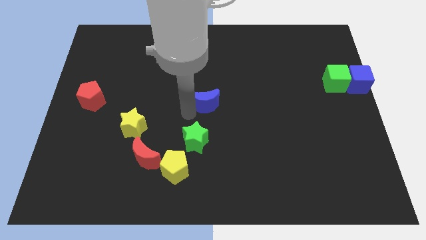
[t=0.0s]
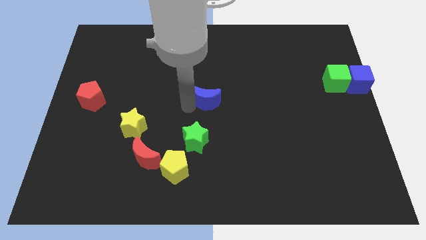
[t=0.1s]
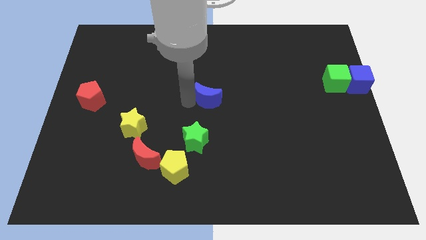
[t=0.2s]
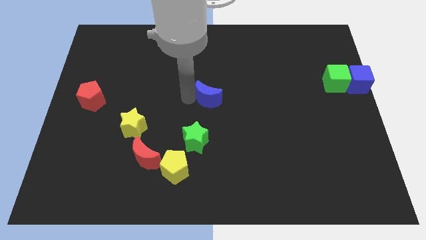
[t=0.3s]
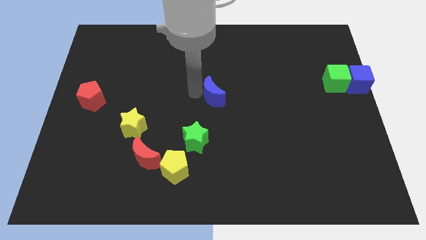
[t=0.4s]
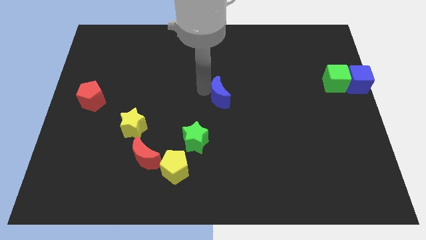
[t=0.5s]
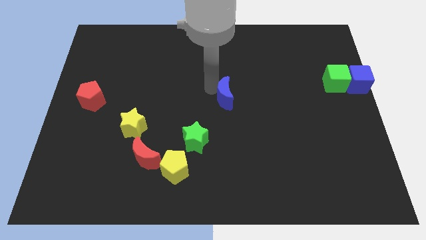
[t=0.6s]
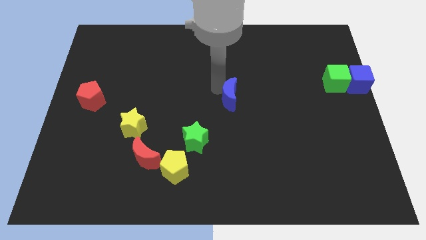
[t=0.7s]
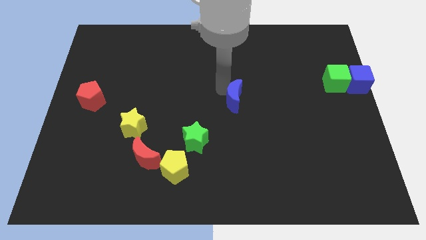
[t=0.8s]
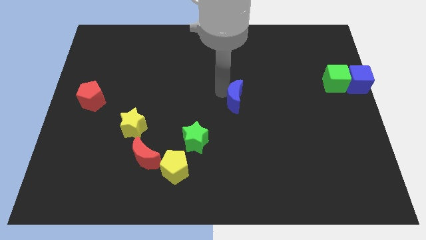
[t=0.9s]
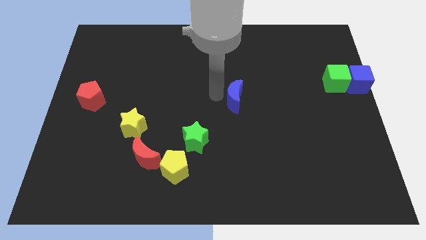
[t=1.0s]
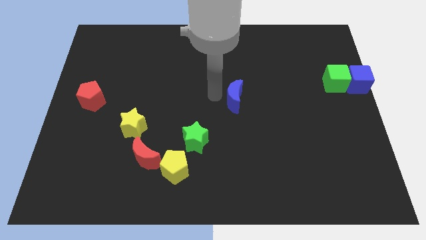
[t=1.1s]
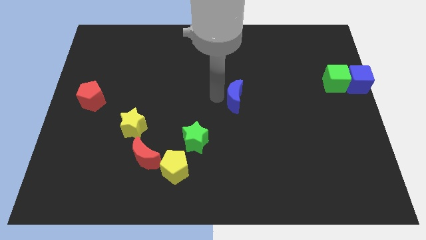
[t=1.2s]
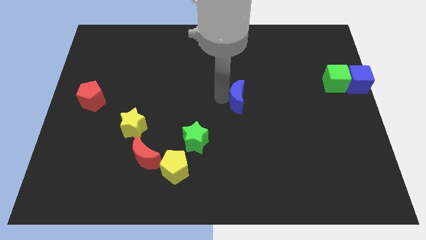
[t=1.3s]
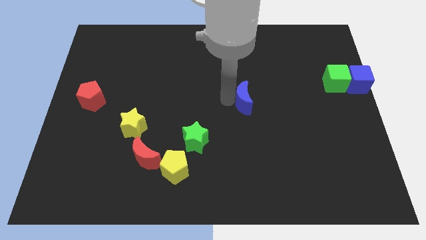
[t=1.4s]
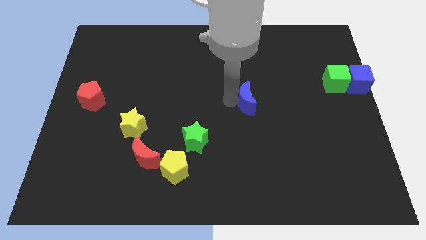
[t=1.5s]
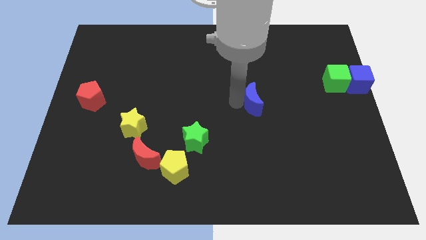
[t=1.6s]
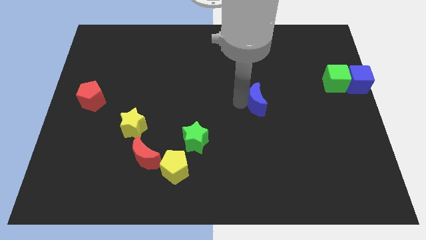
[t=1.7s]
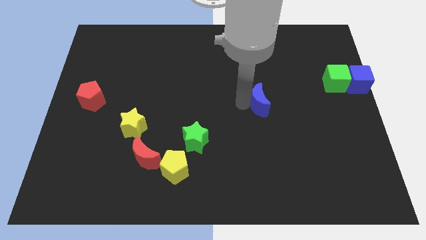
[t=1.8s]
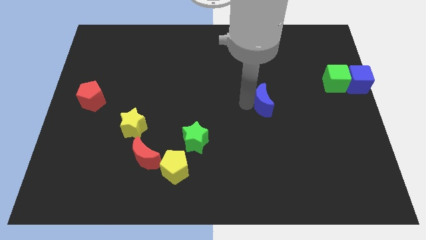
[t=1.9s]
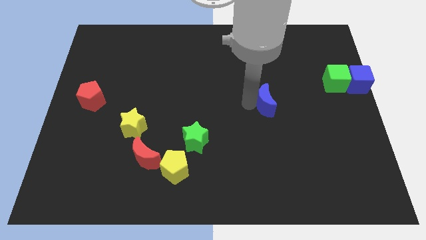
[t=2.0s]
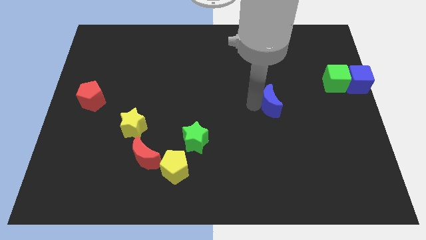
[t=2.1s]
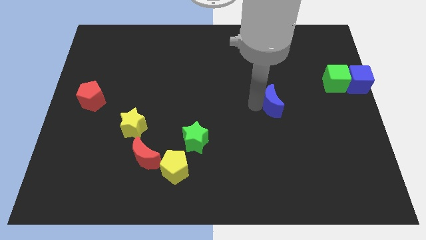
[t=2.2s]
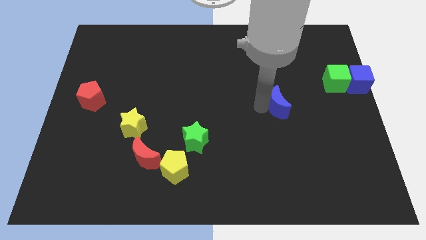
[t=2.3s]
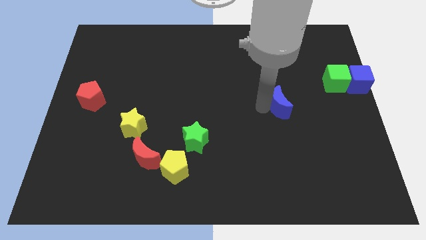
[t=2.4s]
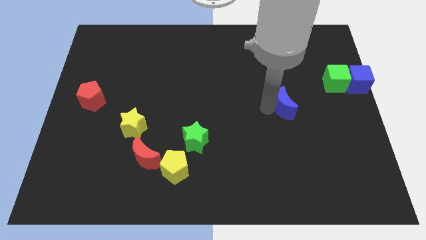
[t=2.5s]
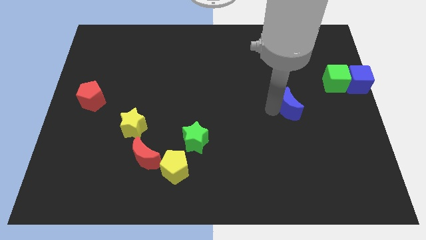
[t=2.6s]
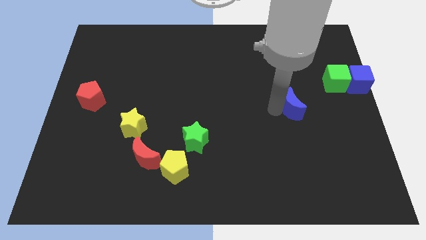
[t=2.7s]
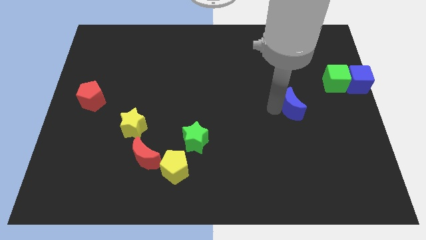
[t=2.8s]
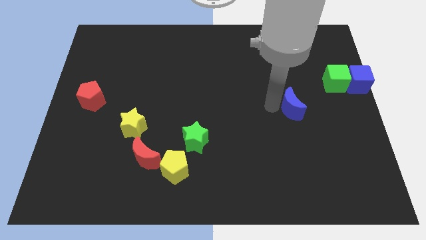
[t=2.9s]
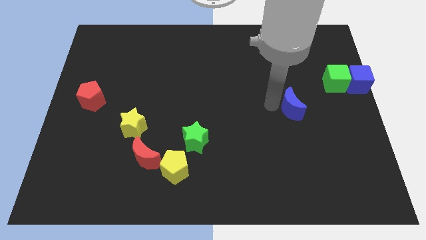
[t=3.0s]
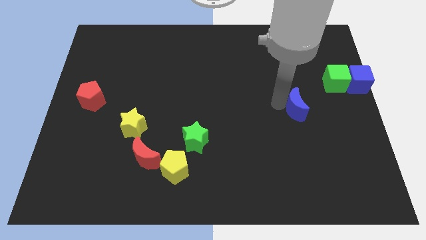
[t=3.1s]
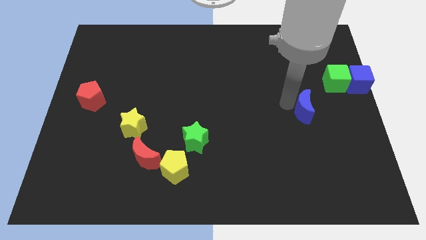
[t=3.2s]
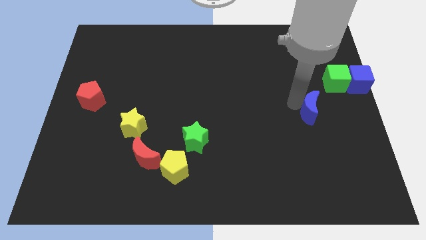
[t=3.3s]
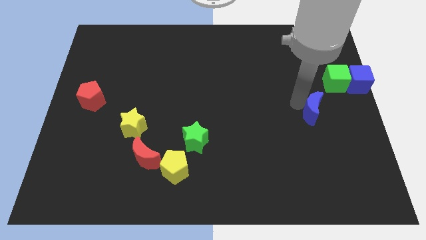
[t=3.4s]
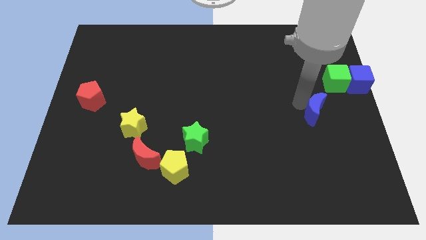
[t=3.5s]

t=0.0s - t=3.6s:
slide the blue crescent towards the center right

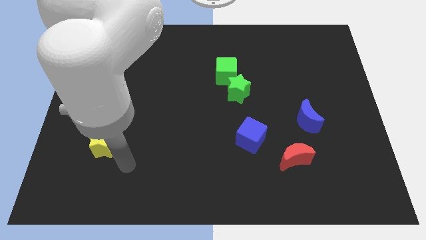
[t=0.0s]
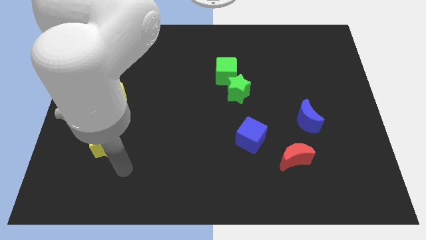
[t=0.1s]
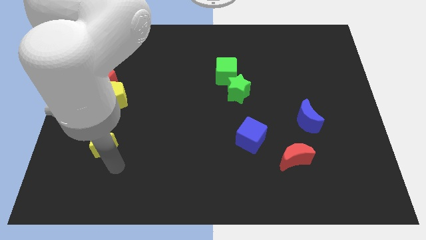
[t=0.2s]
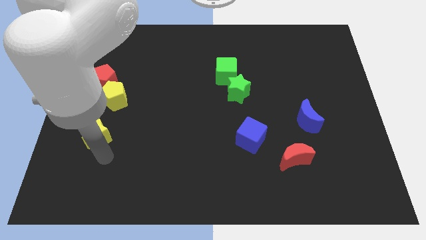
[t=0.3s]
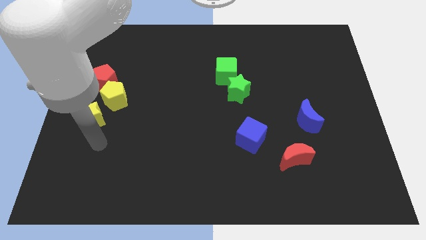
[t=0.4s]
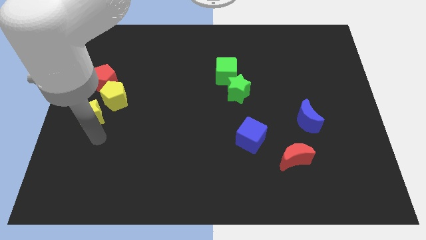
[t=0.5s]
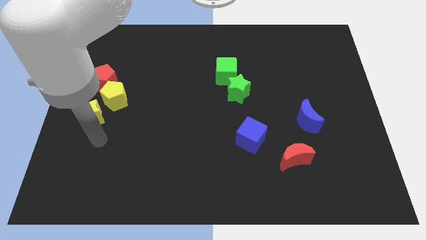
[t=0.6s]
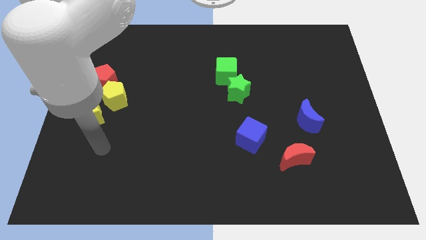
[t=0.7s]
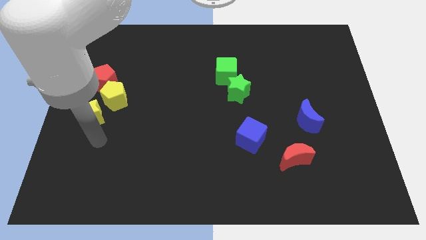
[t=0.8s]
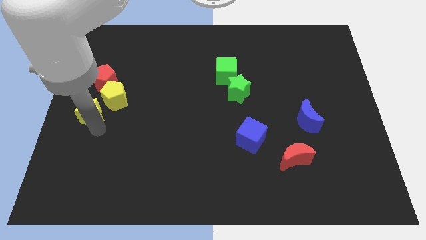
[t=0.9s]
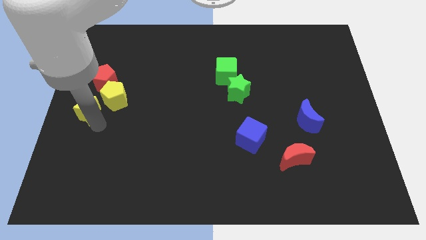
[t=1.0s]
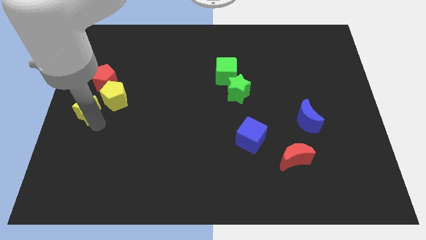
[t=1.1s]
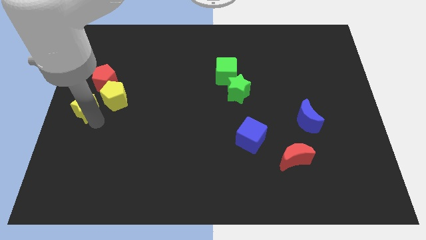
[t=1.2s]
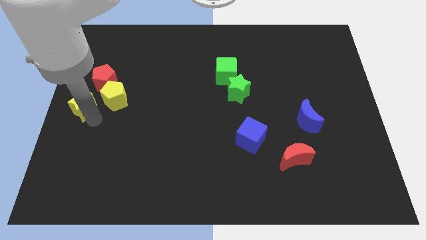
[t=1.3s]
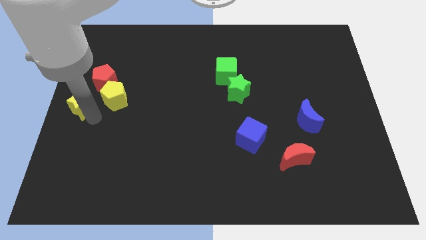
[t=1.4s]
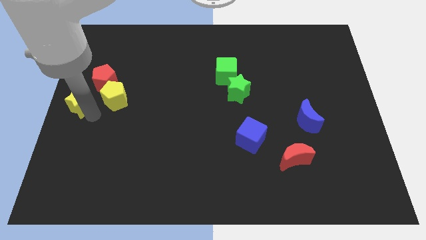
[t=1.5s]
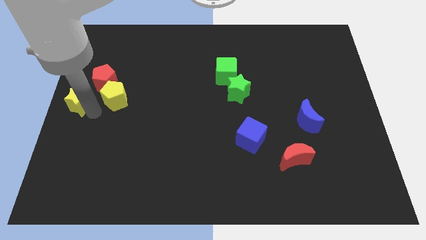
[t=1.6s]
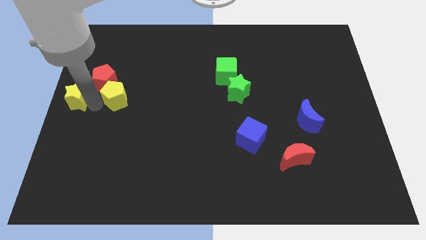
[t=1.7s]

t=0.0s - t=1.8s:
place the yellow star towards the left center of the board

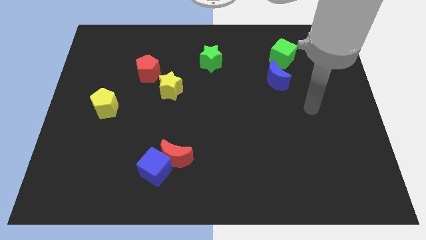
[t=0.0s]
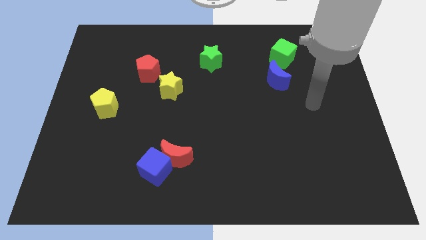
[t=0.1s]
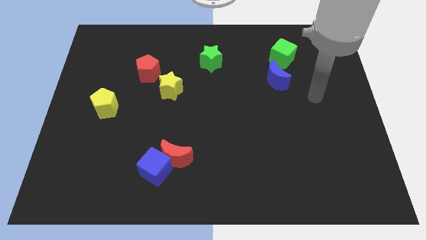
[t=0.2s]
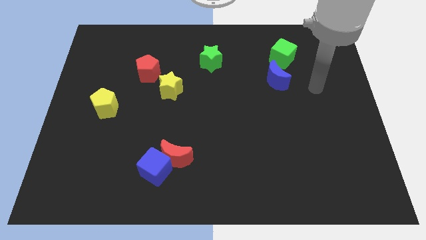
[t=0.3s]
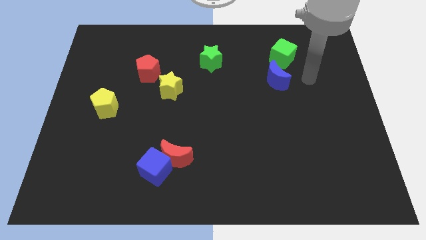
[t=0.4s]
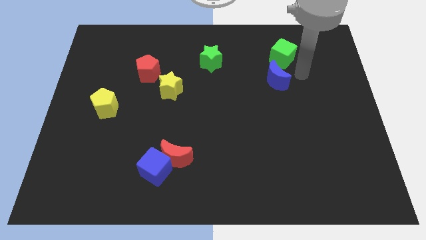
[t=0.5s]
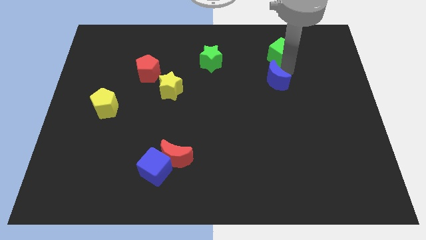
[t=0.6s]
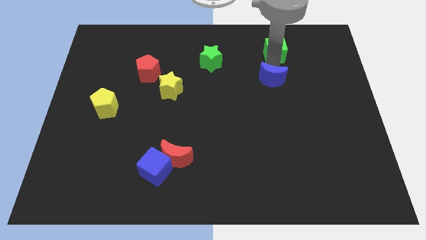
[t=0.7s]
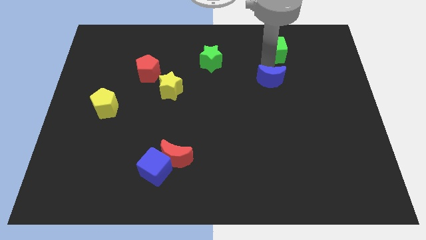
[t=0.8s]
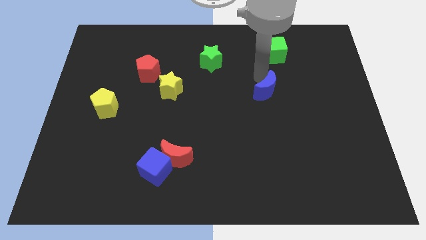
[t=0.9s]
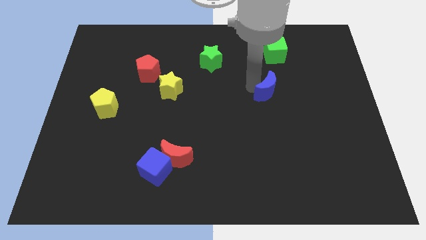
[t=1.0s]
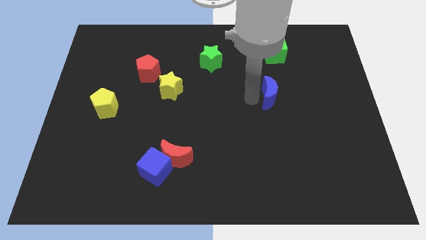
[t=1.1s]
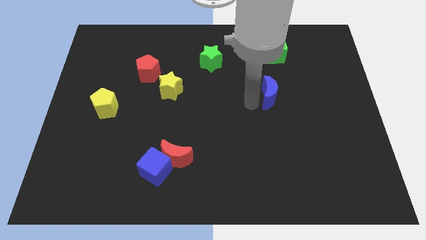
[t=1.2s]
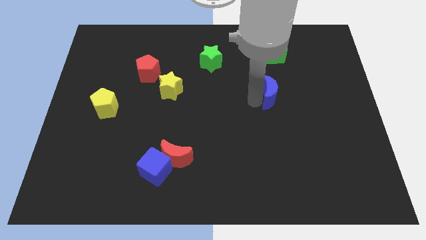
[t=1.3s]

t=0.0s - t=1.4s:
separate the blue moon and green cube

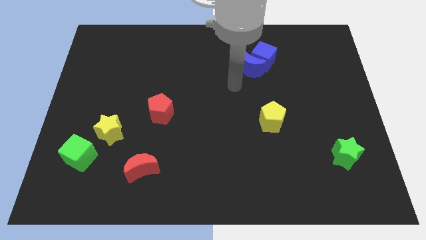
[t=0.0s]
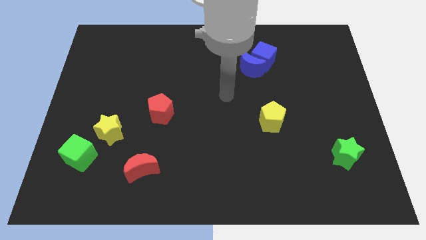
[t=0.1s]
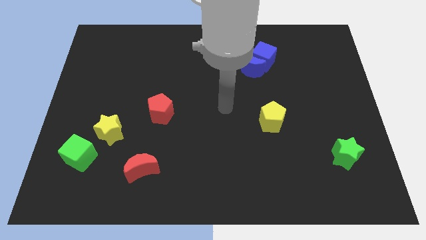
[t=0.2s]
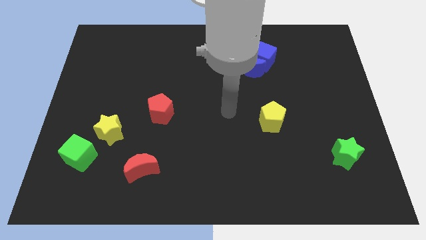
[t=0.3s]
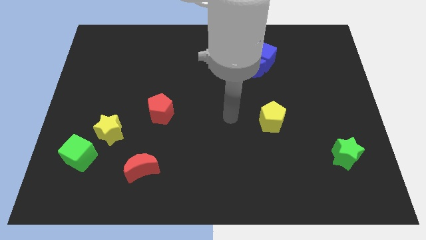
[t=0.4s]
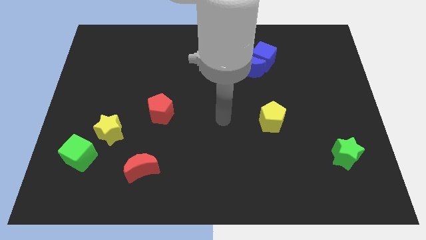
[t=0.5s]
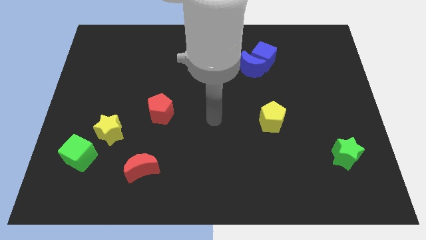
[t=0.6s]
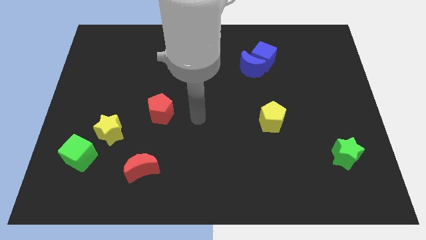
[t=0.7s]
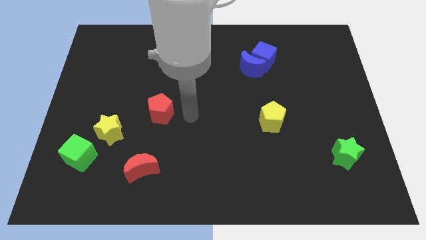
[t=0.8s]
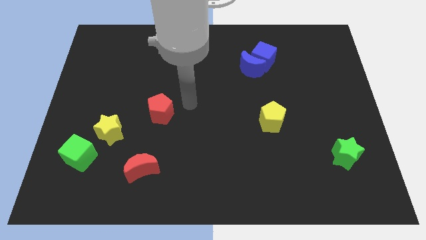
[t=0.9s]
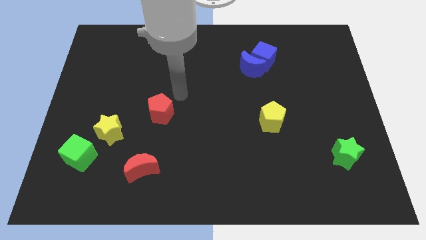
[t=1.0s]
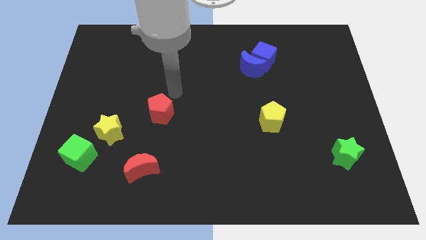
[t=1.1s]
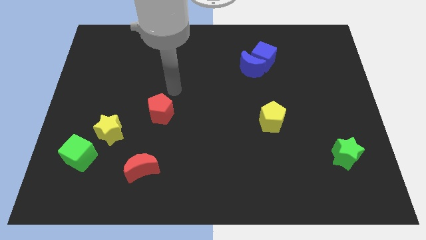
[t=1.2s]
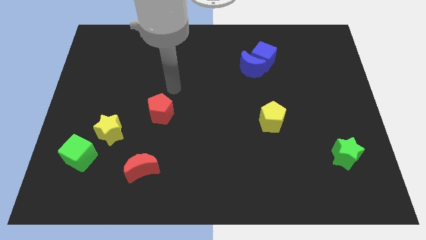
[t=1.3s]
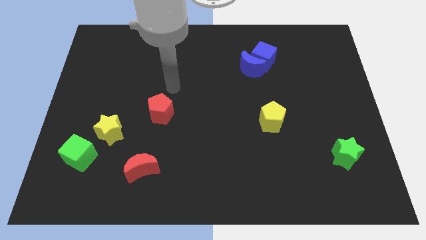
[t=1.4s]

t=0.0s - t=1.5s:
point your hand at the top right side of the red pentagon

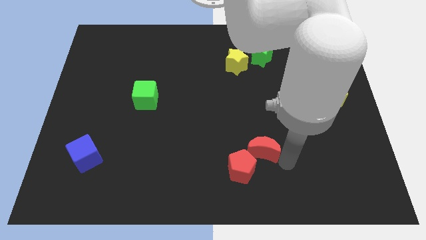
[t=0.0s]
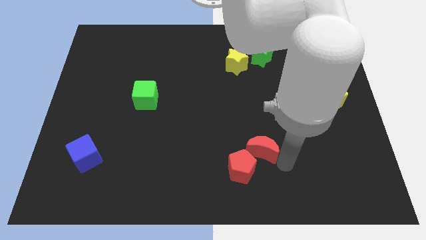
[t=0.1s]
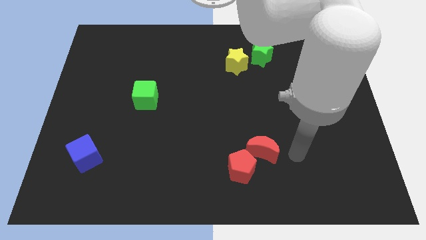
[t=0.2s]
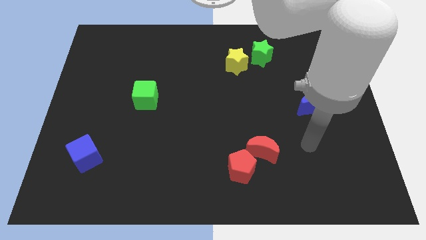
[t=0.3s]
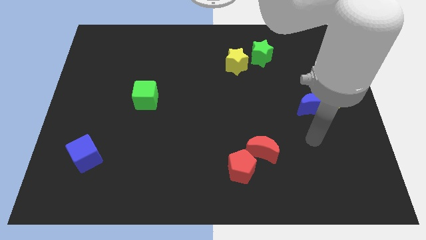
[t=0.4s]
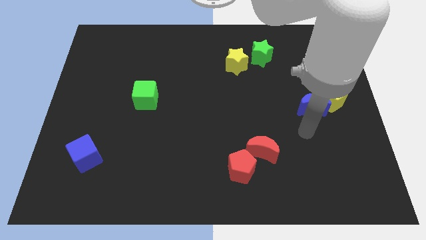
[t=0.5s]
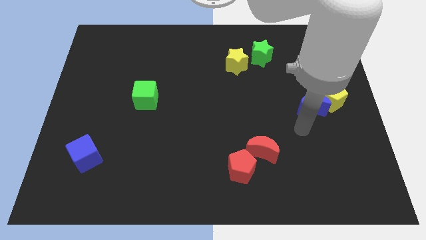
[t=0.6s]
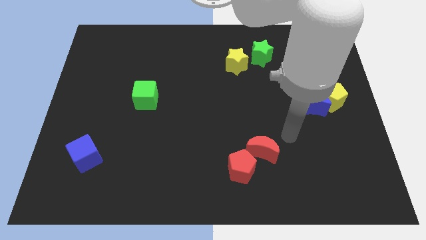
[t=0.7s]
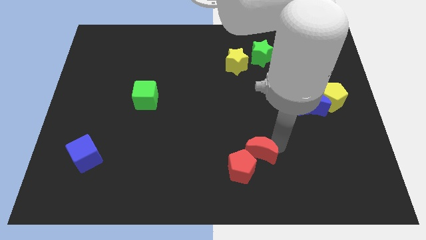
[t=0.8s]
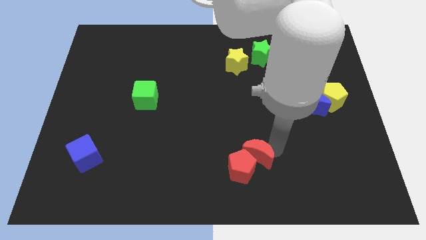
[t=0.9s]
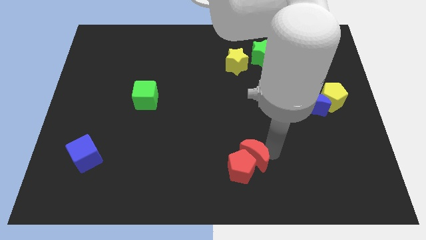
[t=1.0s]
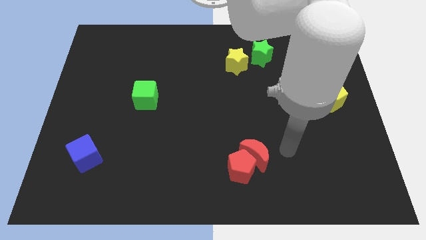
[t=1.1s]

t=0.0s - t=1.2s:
push the red crescent close to the red pentagon
